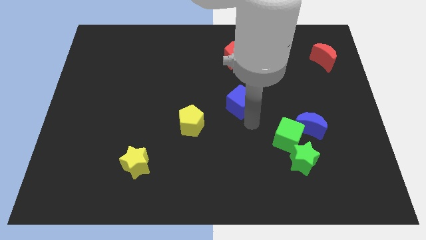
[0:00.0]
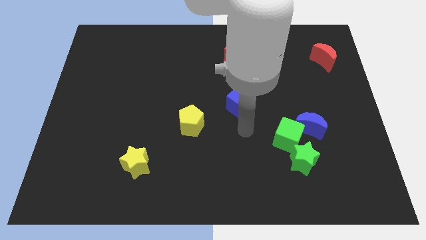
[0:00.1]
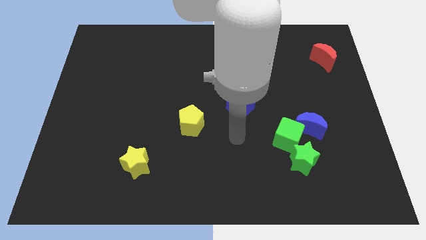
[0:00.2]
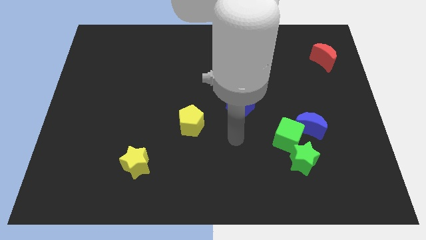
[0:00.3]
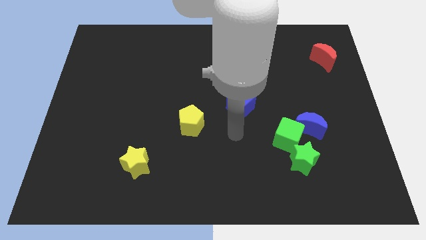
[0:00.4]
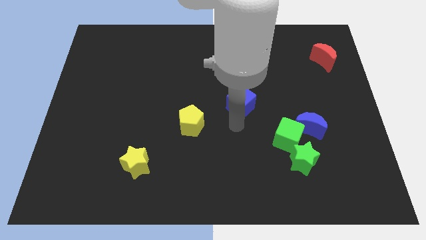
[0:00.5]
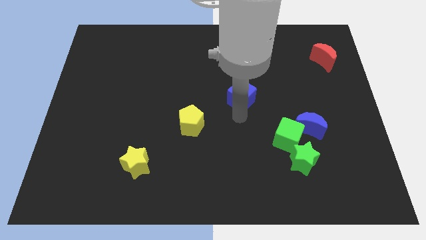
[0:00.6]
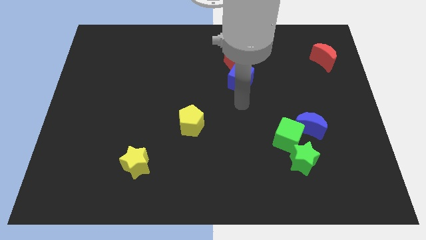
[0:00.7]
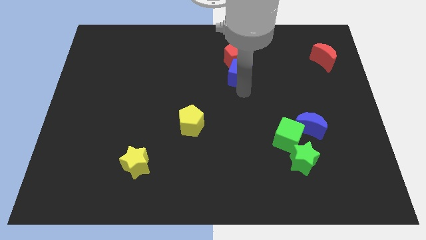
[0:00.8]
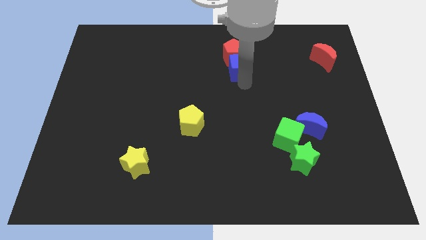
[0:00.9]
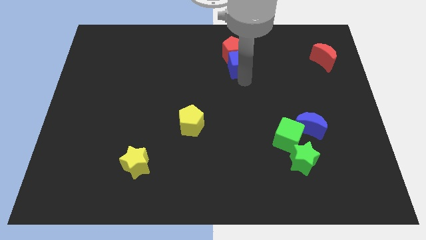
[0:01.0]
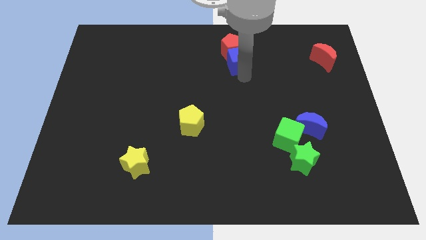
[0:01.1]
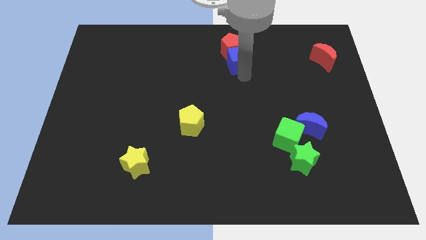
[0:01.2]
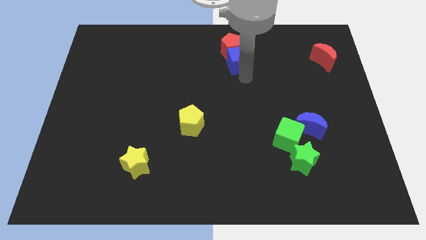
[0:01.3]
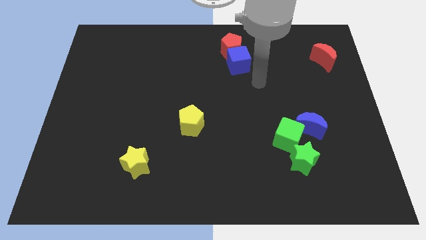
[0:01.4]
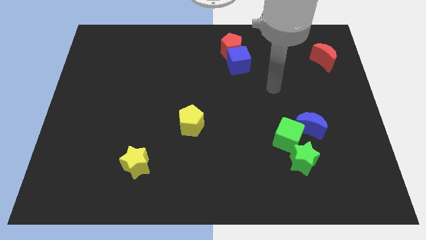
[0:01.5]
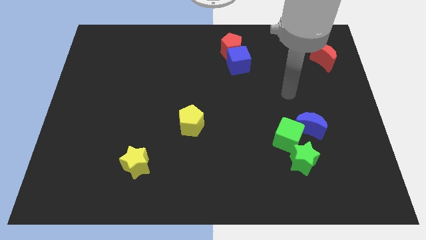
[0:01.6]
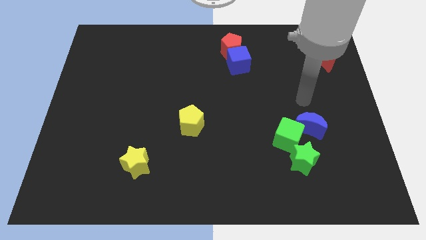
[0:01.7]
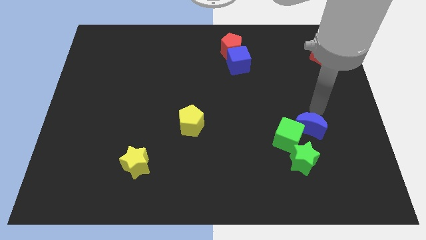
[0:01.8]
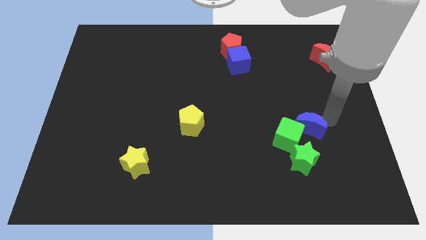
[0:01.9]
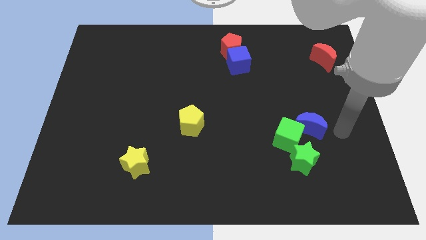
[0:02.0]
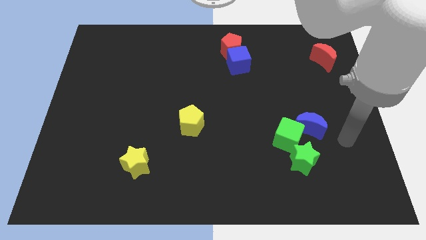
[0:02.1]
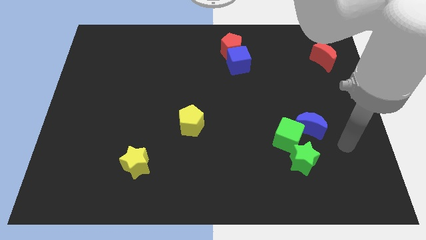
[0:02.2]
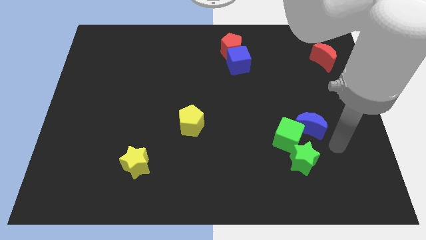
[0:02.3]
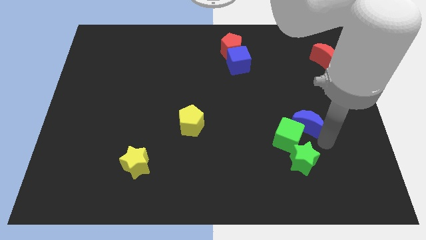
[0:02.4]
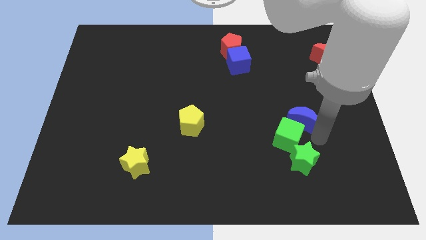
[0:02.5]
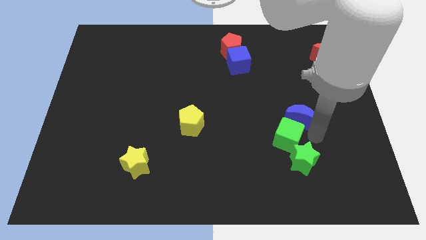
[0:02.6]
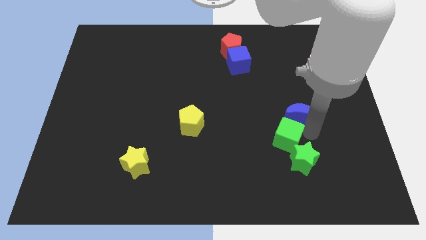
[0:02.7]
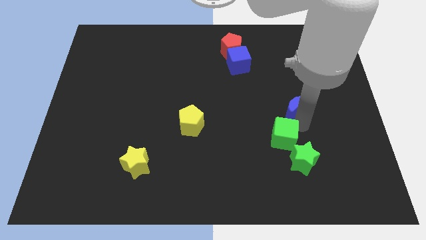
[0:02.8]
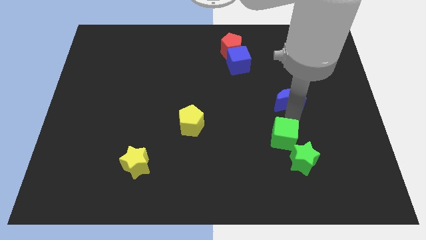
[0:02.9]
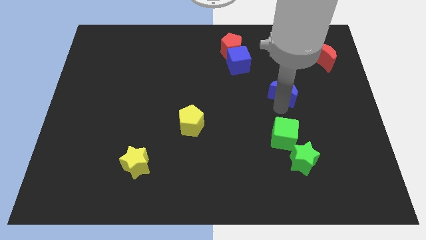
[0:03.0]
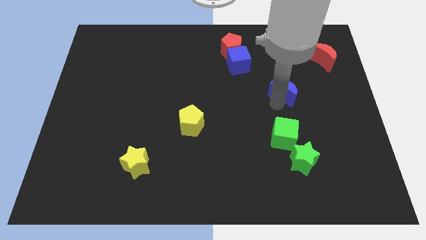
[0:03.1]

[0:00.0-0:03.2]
push the blue blocks towards top center

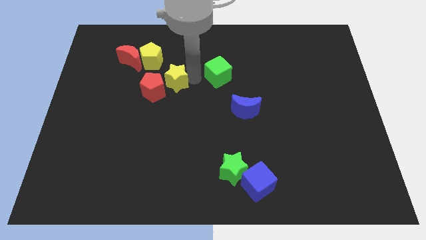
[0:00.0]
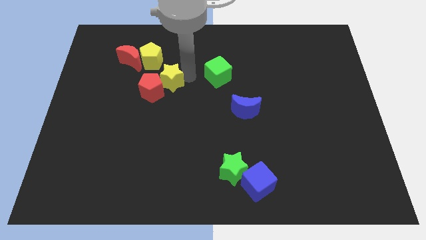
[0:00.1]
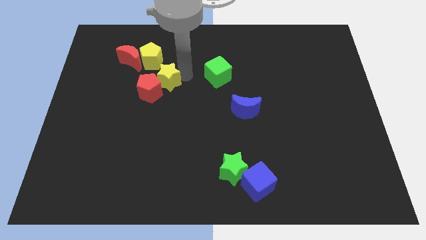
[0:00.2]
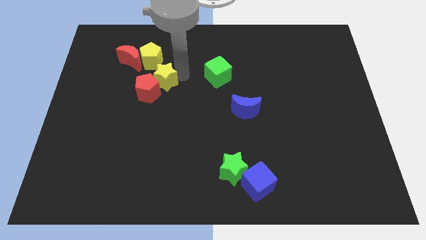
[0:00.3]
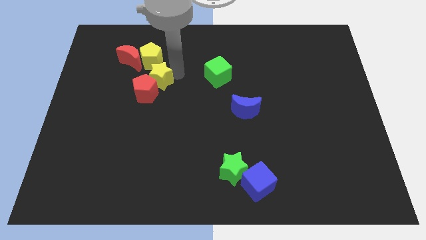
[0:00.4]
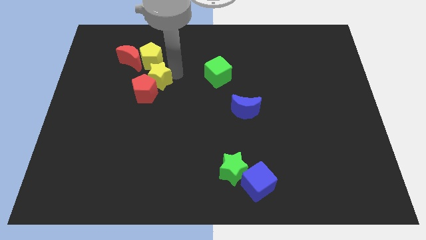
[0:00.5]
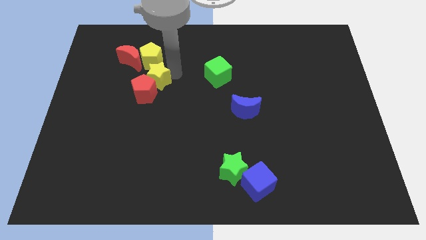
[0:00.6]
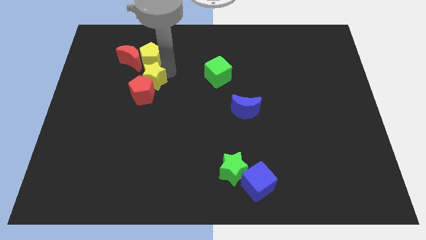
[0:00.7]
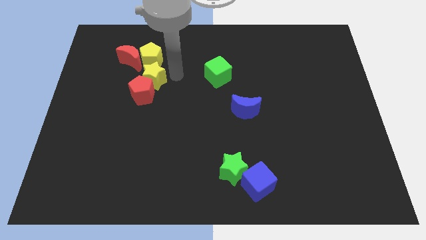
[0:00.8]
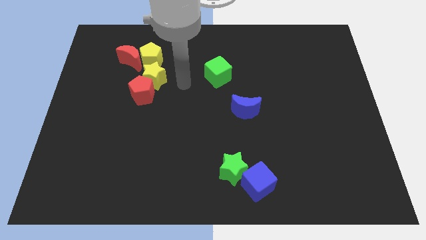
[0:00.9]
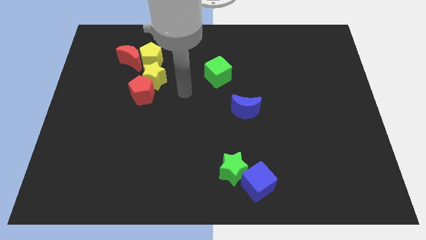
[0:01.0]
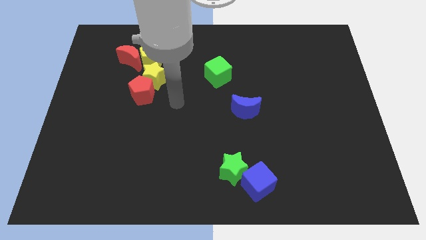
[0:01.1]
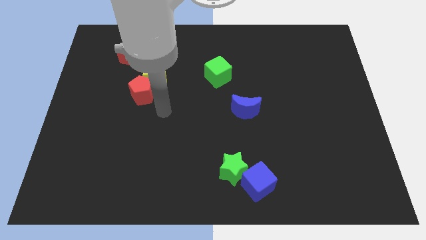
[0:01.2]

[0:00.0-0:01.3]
push the yellow star into red pentagon

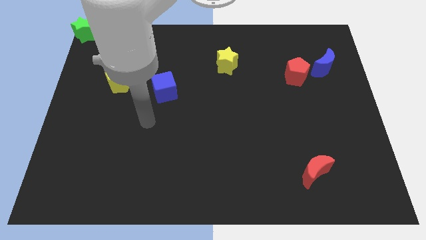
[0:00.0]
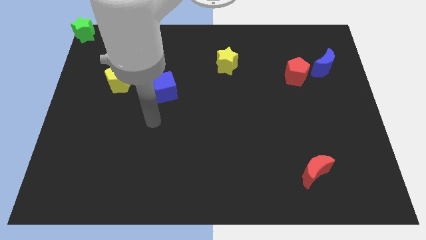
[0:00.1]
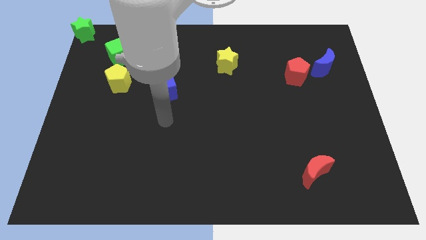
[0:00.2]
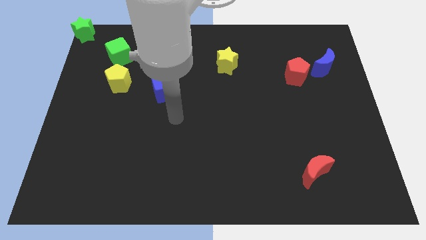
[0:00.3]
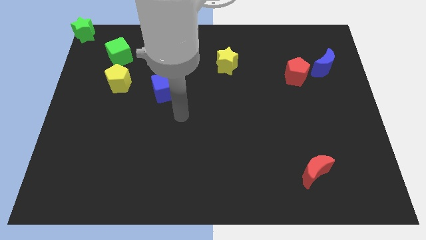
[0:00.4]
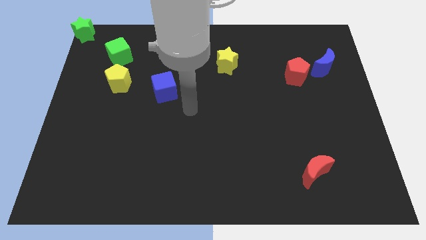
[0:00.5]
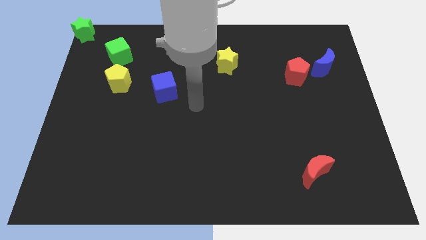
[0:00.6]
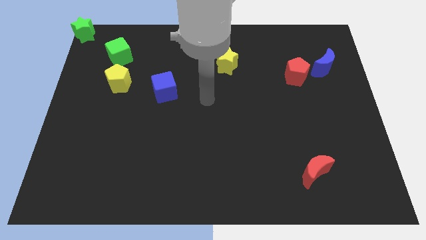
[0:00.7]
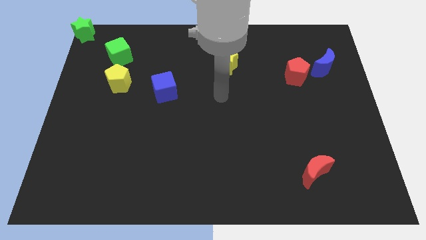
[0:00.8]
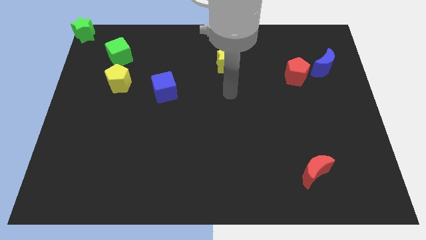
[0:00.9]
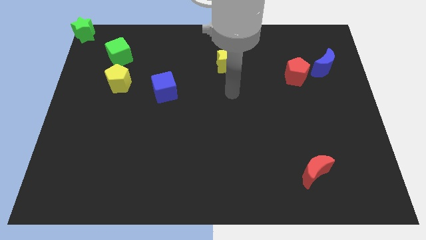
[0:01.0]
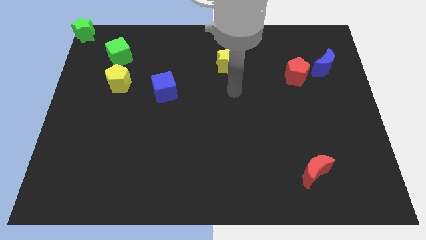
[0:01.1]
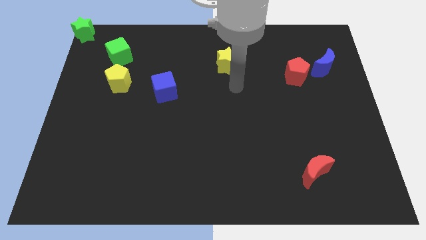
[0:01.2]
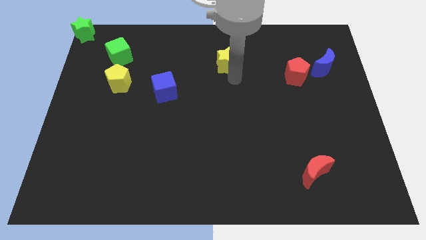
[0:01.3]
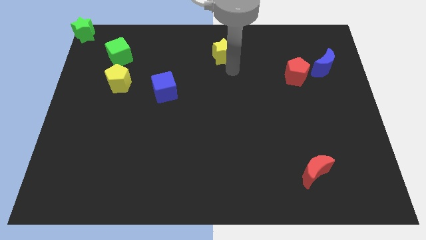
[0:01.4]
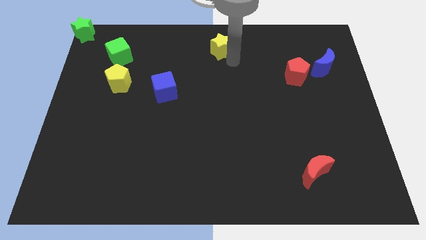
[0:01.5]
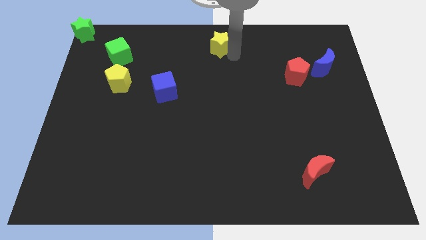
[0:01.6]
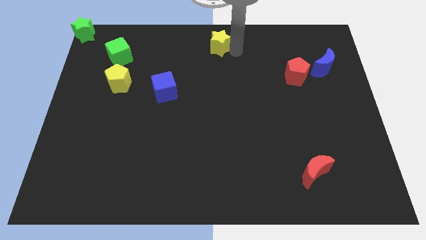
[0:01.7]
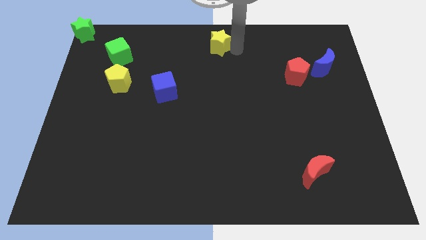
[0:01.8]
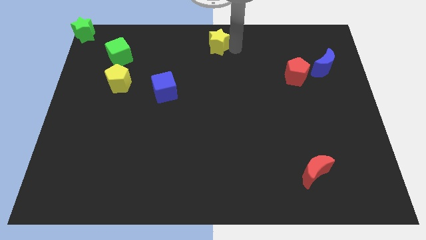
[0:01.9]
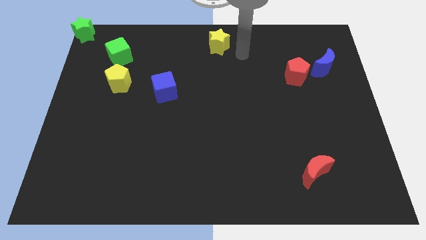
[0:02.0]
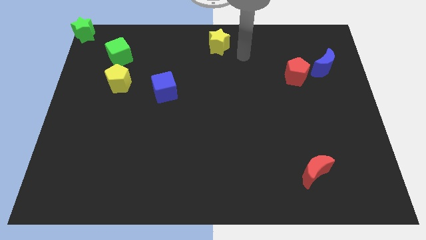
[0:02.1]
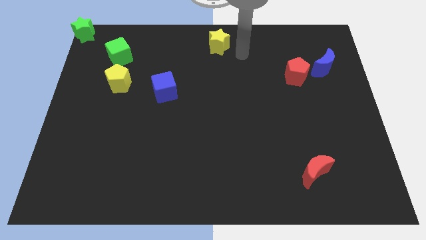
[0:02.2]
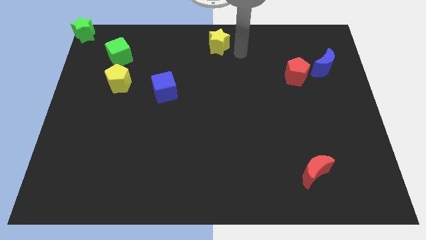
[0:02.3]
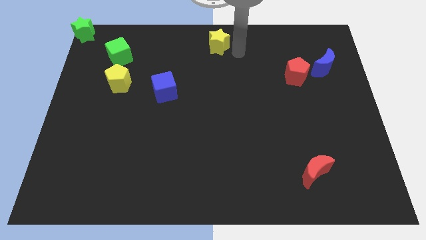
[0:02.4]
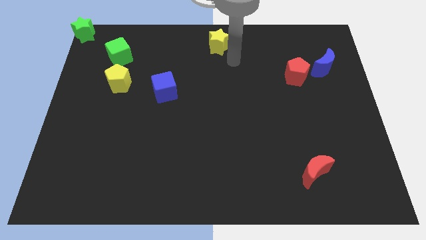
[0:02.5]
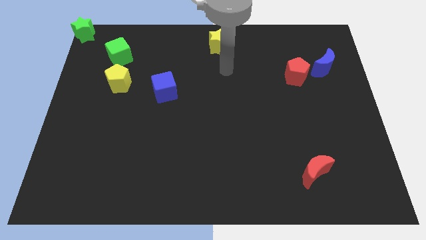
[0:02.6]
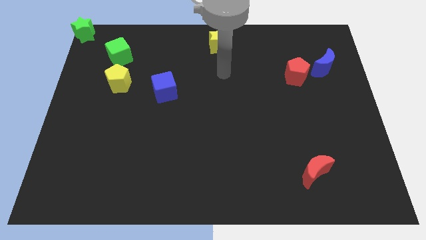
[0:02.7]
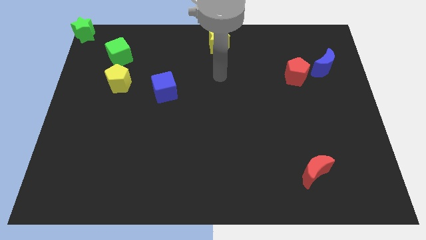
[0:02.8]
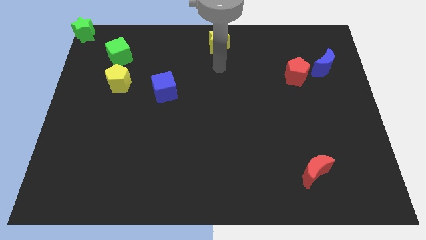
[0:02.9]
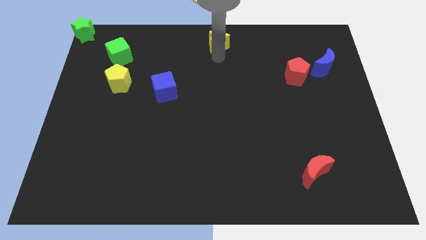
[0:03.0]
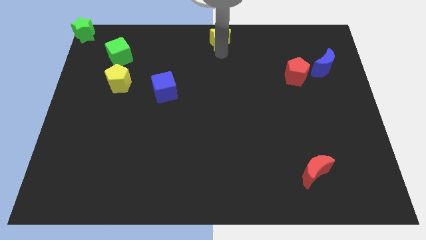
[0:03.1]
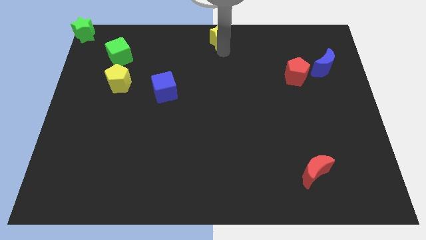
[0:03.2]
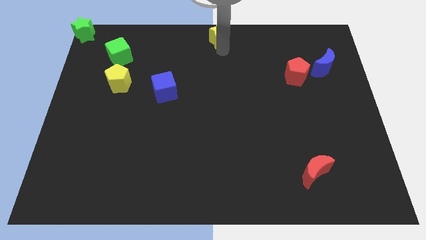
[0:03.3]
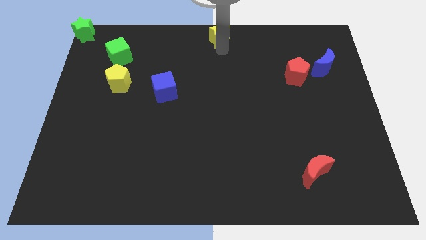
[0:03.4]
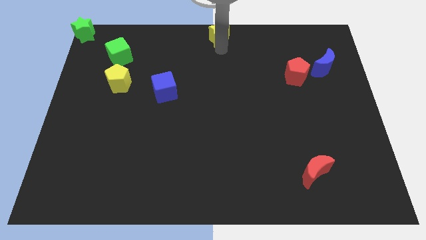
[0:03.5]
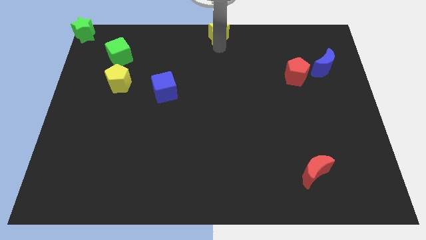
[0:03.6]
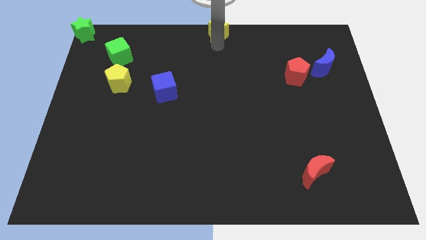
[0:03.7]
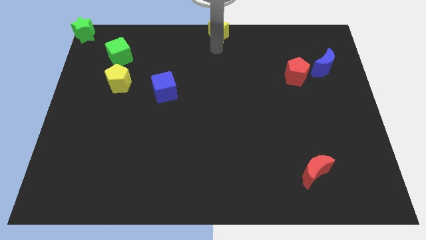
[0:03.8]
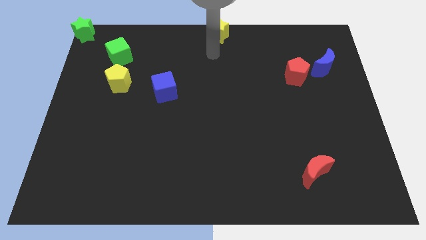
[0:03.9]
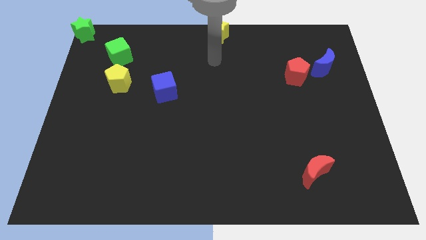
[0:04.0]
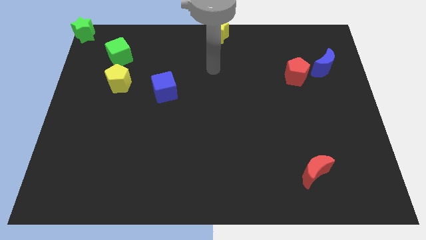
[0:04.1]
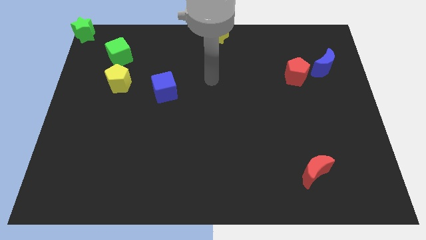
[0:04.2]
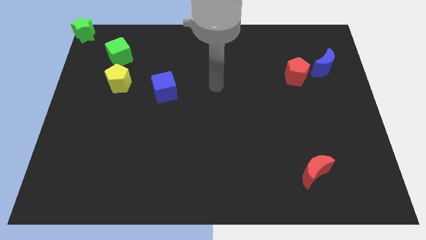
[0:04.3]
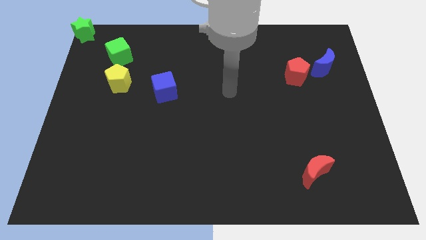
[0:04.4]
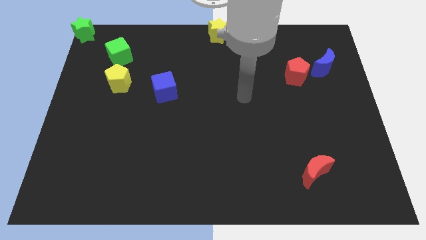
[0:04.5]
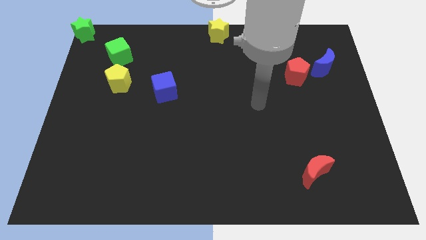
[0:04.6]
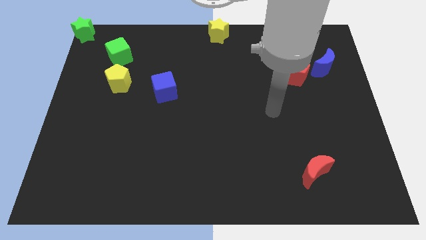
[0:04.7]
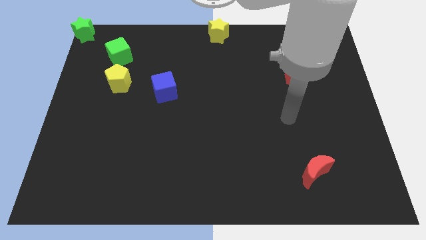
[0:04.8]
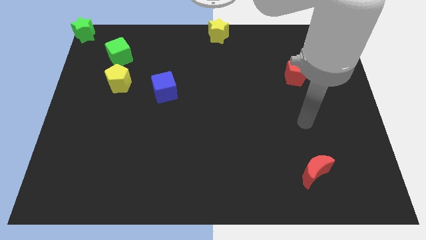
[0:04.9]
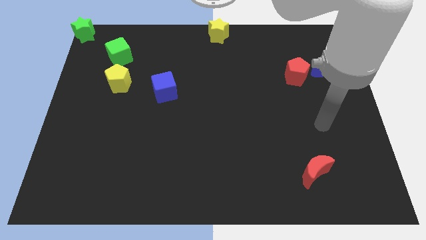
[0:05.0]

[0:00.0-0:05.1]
place yellow star in the top center
